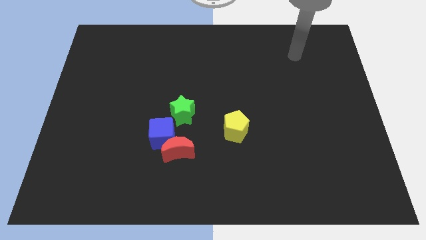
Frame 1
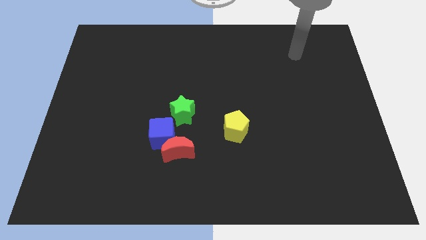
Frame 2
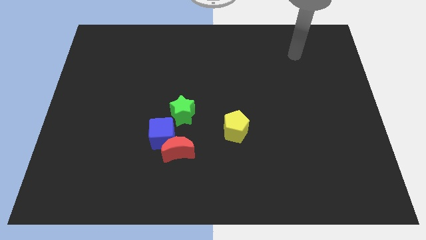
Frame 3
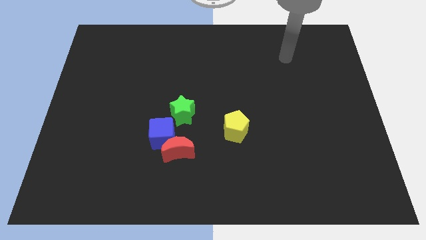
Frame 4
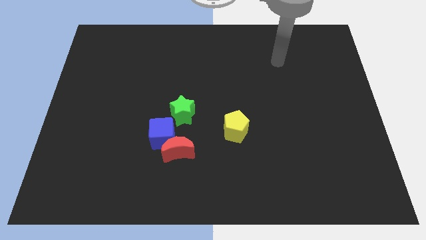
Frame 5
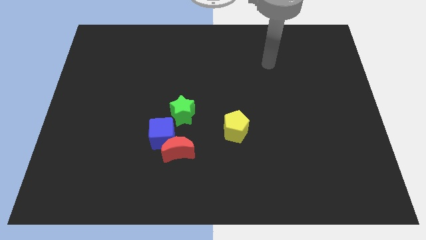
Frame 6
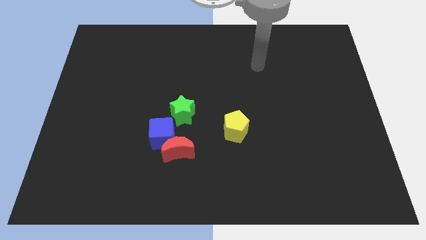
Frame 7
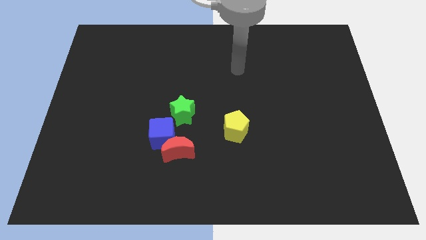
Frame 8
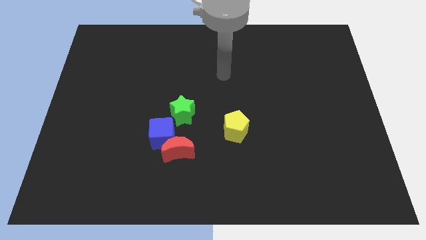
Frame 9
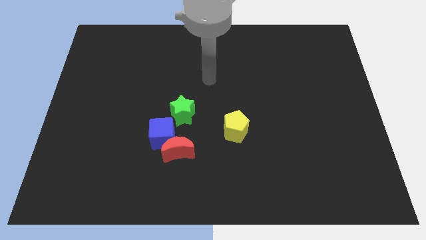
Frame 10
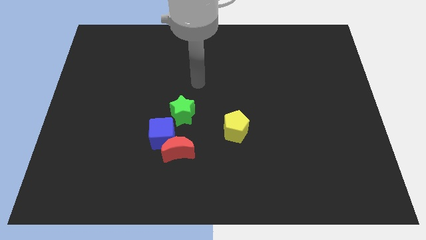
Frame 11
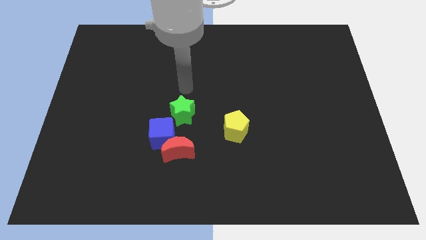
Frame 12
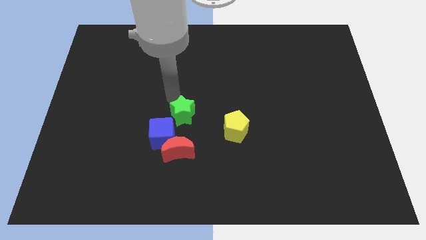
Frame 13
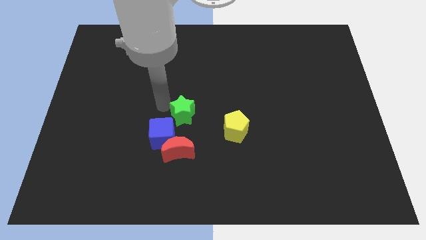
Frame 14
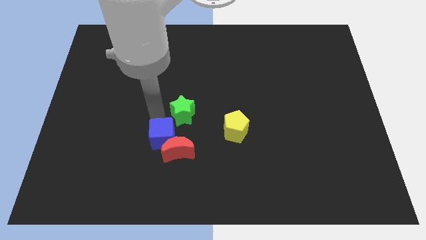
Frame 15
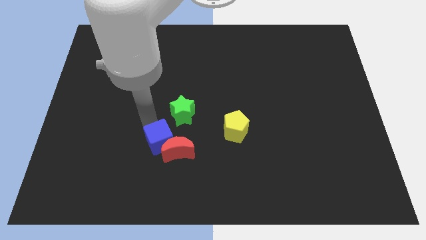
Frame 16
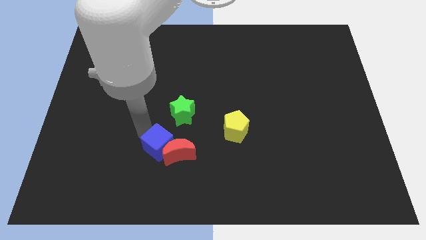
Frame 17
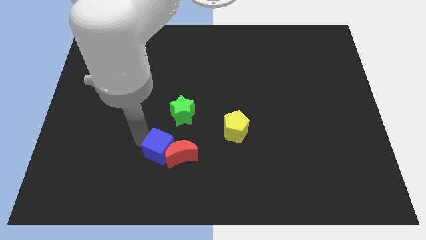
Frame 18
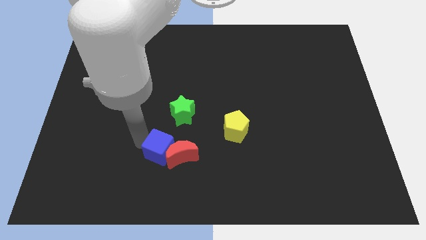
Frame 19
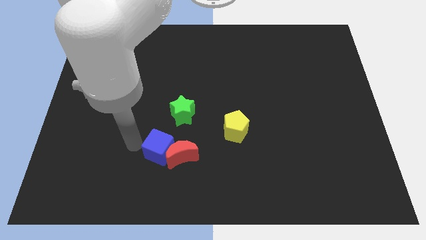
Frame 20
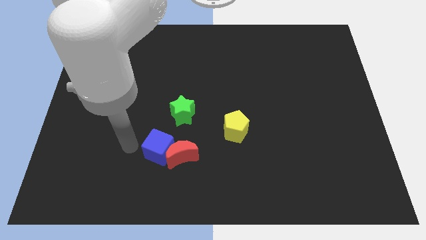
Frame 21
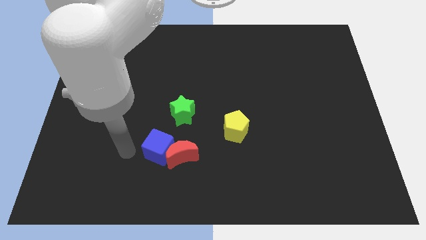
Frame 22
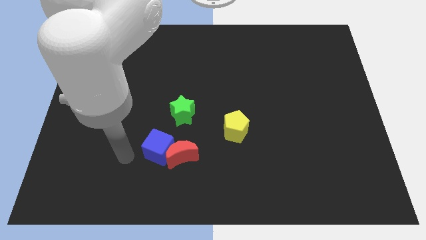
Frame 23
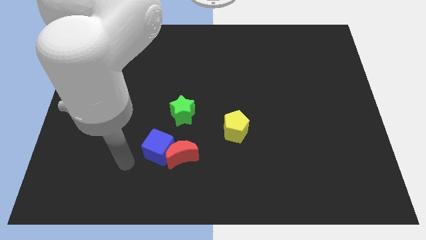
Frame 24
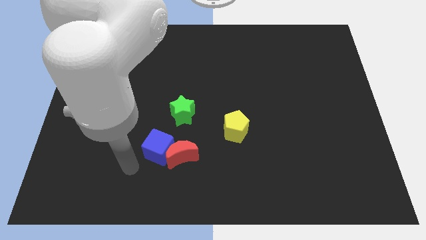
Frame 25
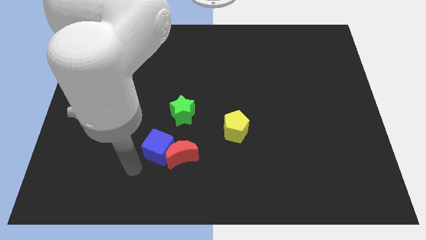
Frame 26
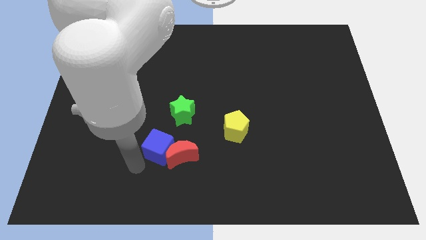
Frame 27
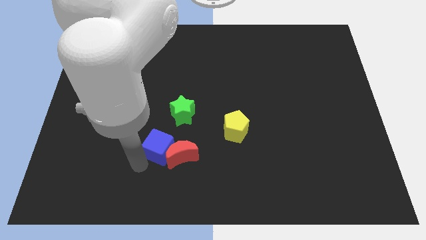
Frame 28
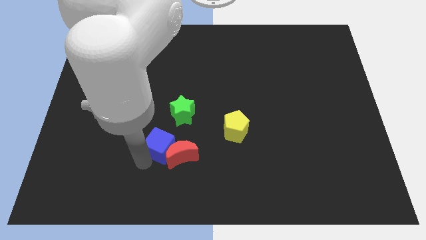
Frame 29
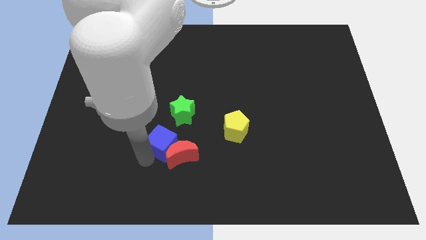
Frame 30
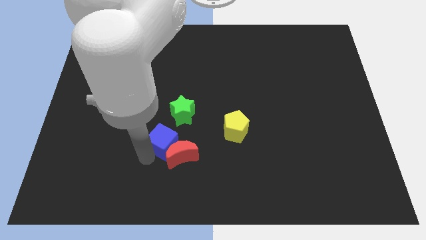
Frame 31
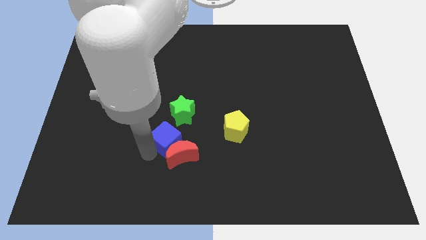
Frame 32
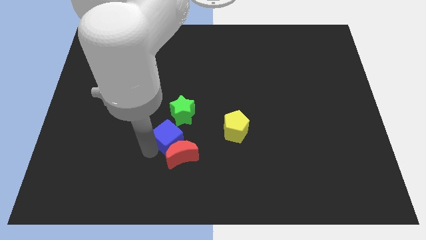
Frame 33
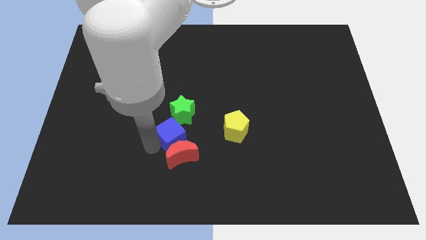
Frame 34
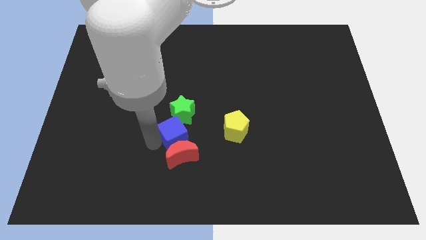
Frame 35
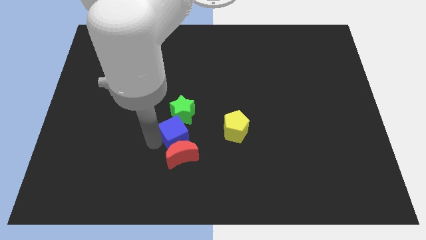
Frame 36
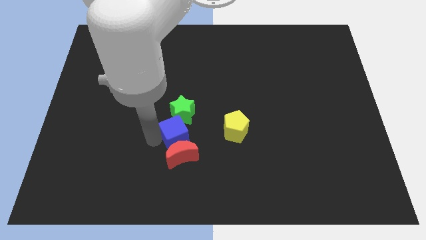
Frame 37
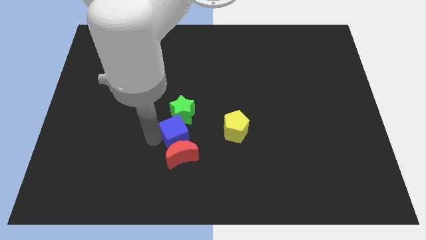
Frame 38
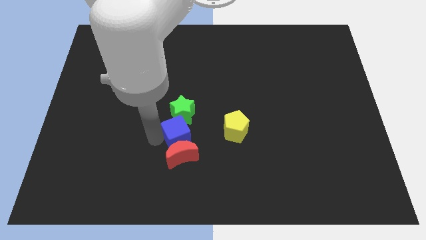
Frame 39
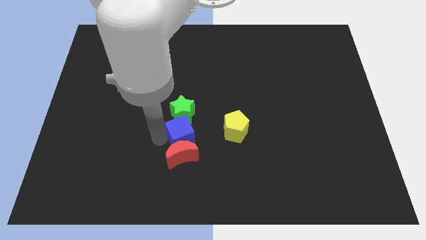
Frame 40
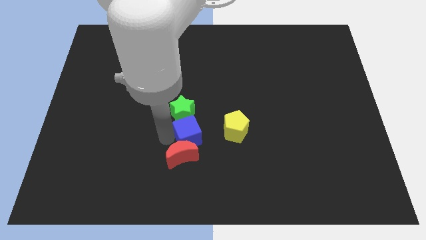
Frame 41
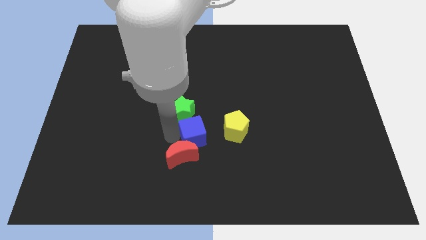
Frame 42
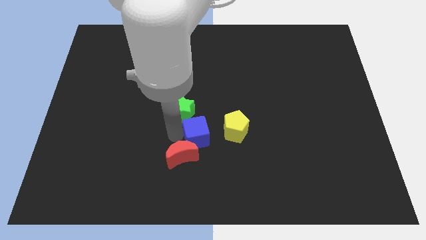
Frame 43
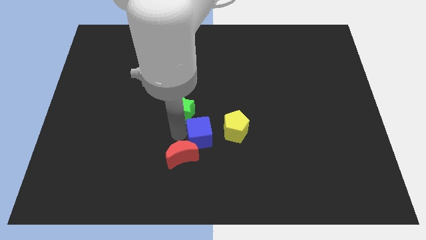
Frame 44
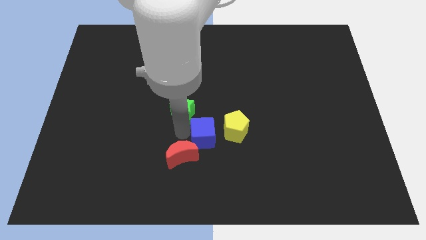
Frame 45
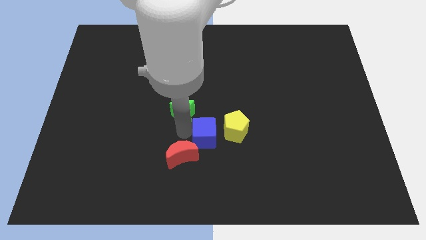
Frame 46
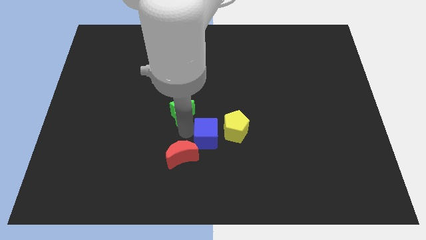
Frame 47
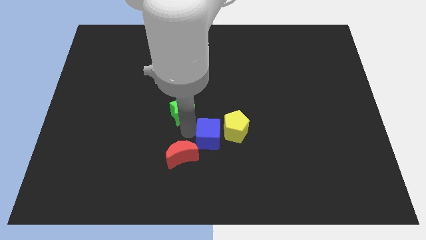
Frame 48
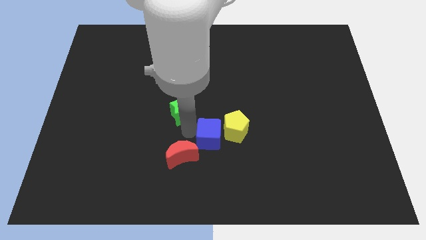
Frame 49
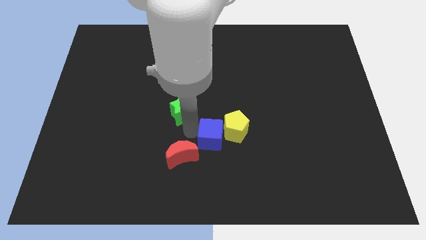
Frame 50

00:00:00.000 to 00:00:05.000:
put the blue block next to the pentagon

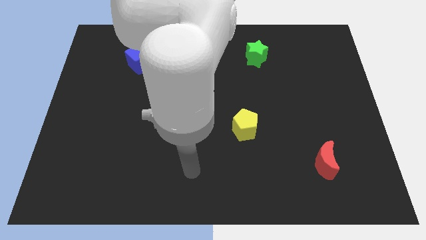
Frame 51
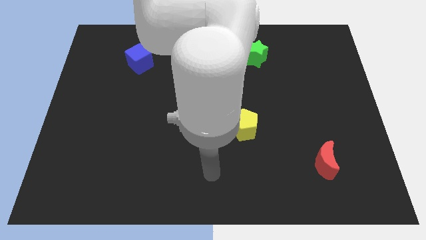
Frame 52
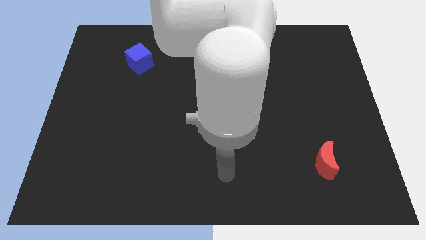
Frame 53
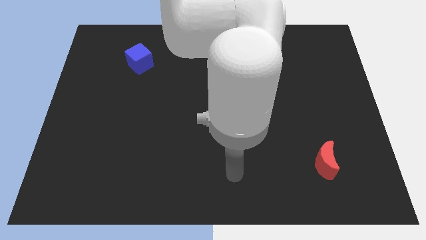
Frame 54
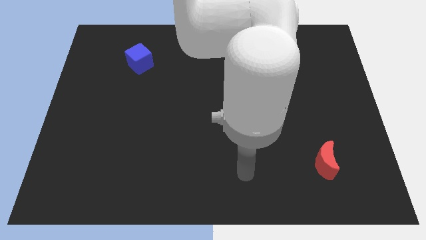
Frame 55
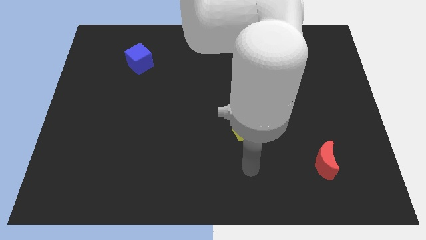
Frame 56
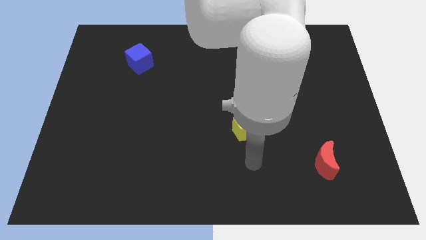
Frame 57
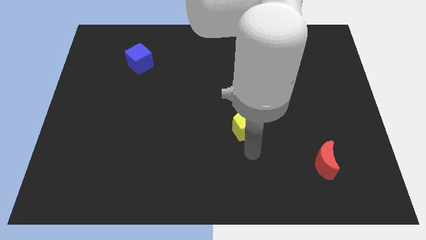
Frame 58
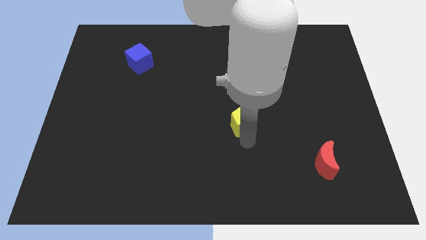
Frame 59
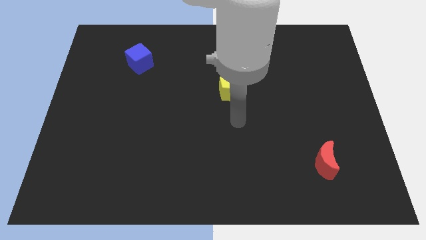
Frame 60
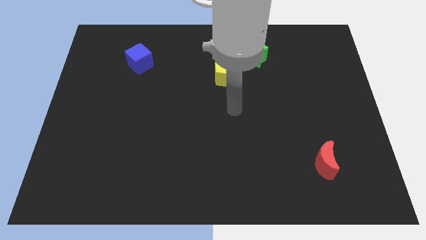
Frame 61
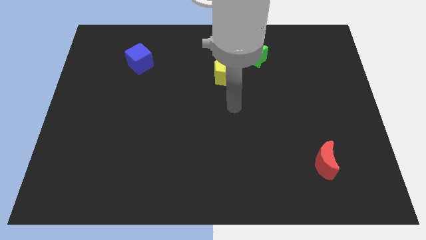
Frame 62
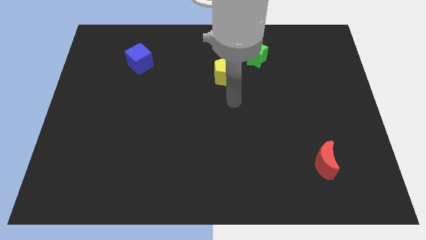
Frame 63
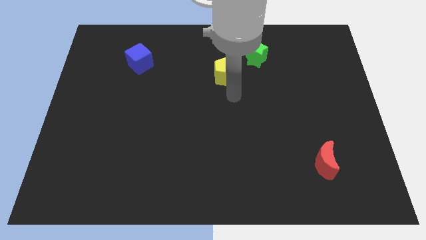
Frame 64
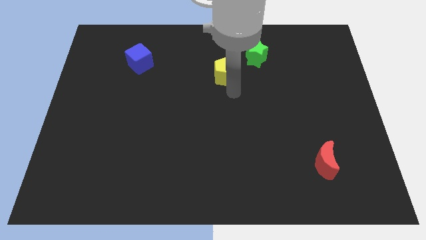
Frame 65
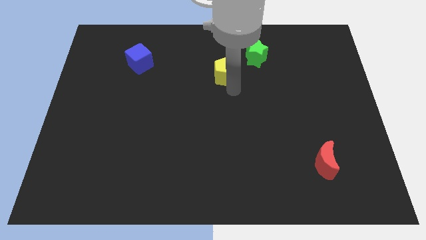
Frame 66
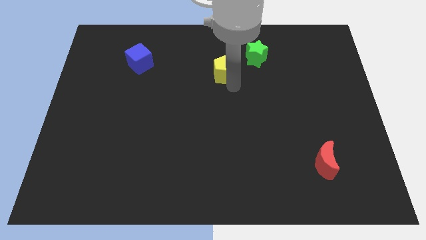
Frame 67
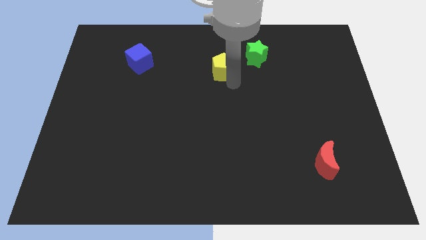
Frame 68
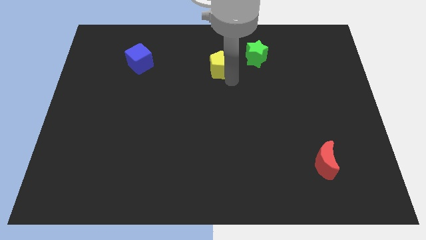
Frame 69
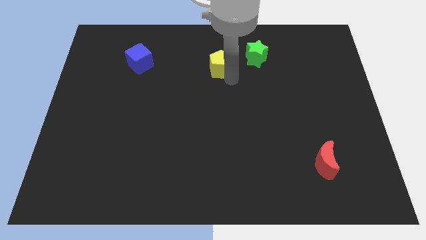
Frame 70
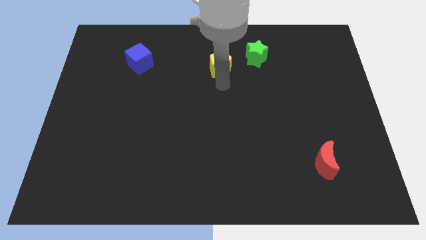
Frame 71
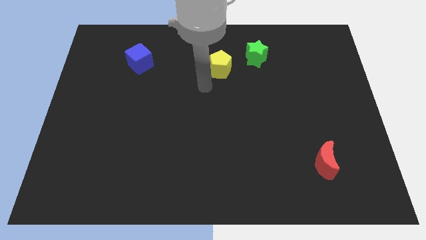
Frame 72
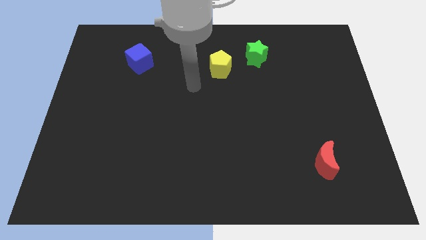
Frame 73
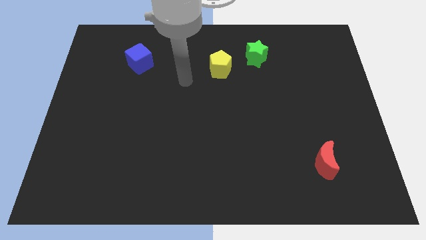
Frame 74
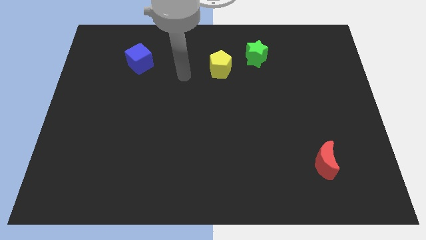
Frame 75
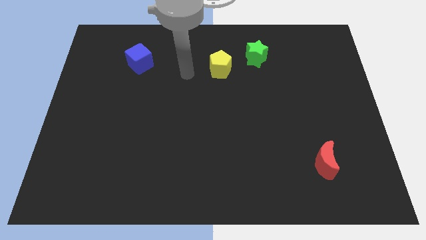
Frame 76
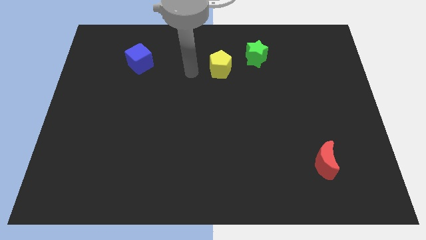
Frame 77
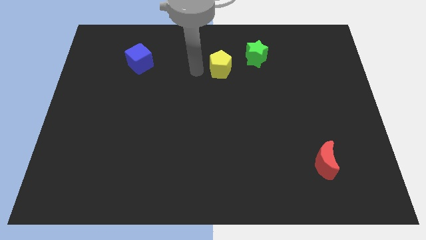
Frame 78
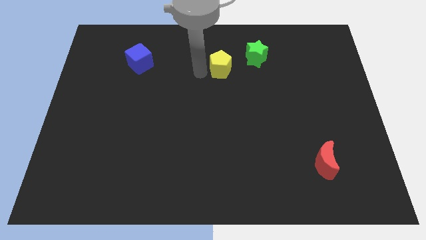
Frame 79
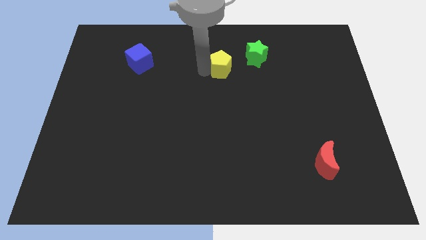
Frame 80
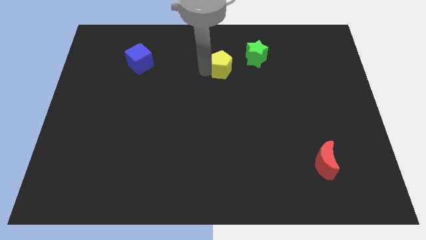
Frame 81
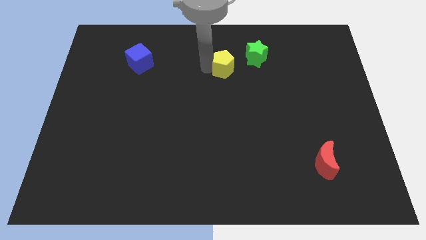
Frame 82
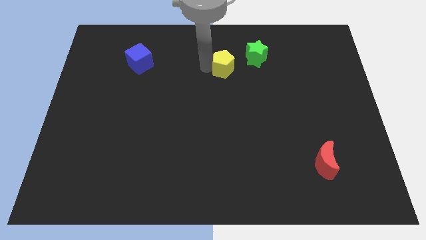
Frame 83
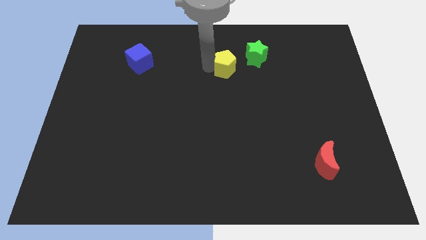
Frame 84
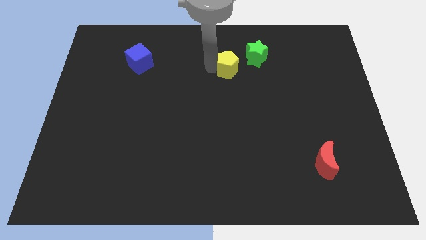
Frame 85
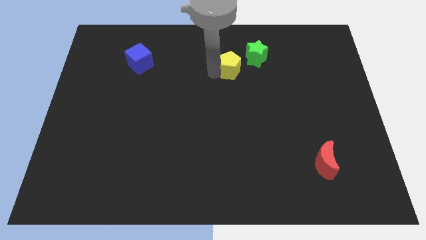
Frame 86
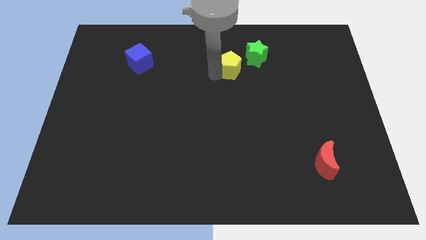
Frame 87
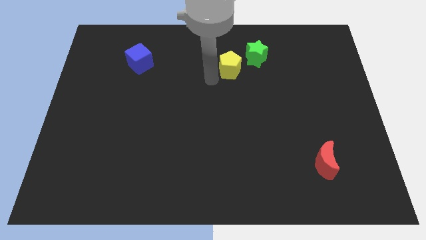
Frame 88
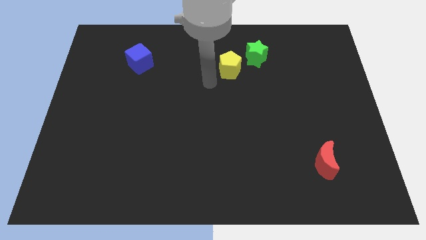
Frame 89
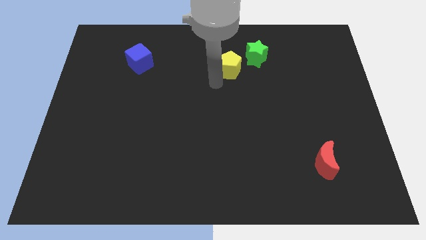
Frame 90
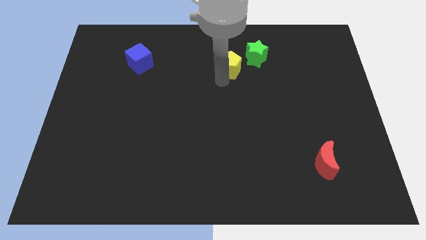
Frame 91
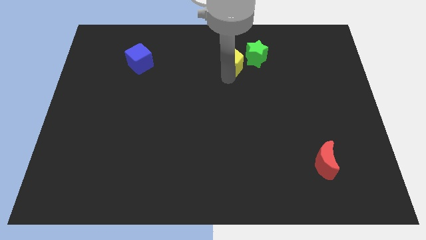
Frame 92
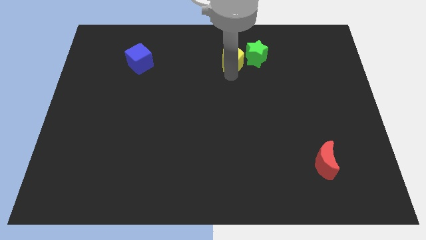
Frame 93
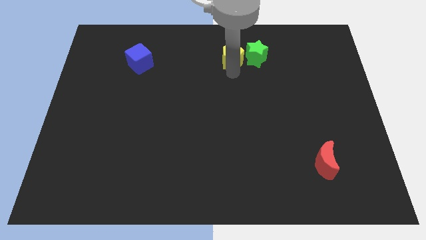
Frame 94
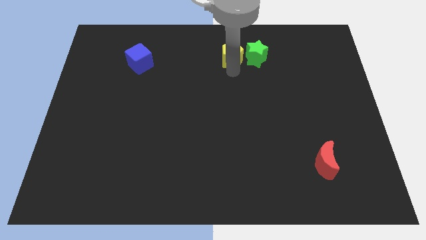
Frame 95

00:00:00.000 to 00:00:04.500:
slide the yellow block close to the green star
